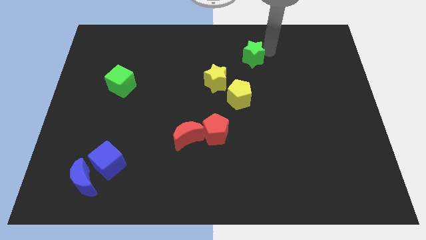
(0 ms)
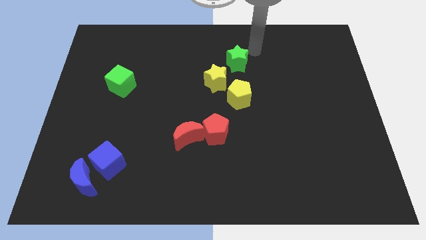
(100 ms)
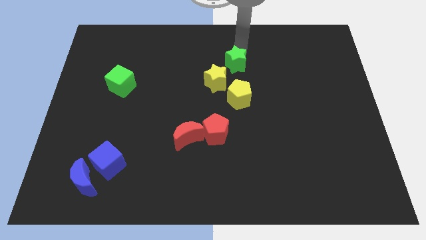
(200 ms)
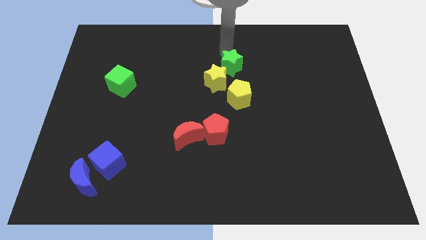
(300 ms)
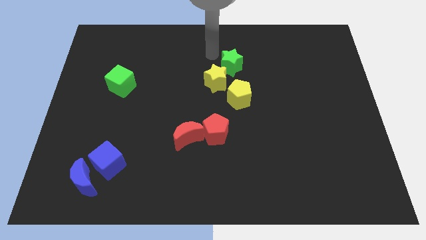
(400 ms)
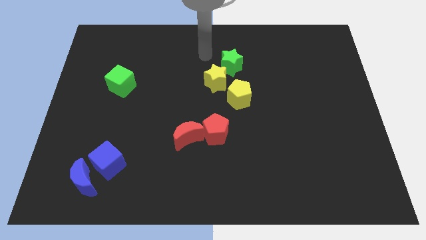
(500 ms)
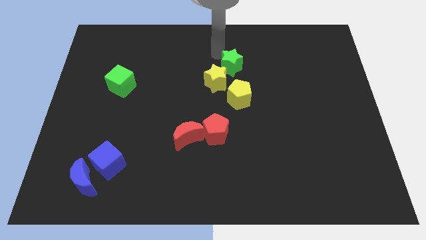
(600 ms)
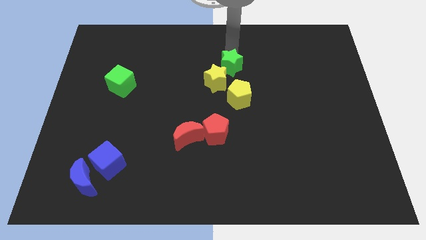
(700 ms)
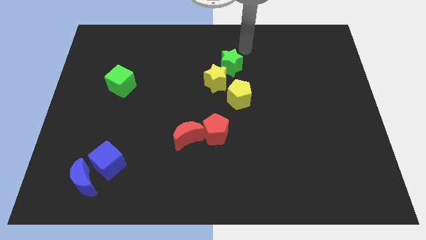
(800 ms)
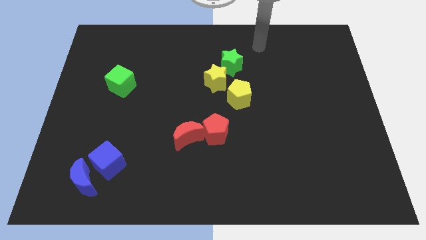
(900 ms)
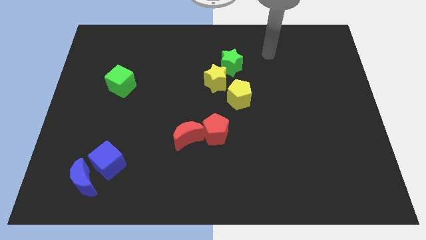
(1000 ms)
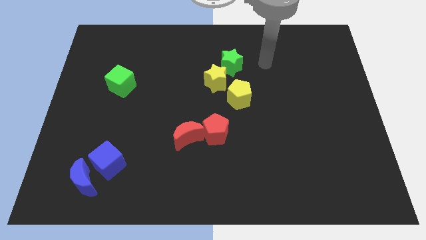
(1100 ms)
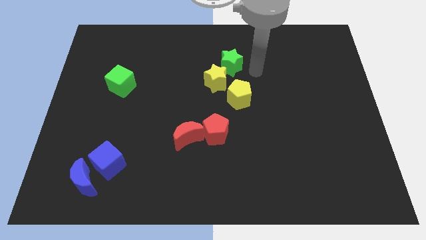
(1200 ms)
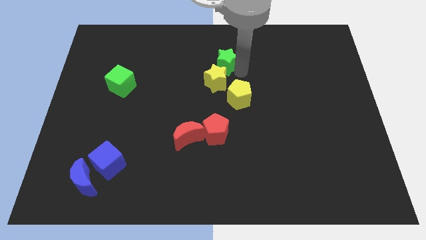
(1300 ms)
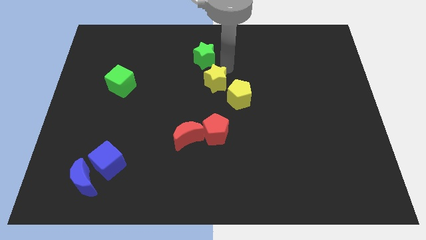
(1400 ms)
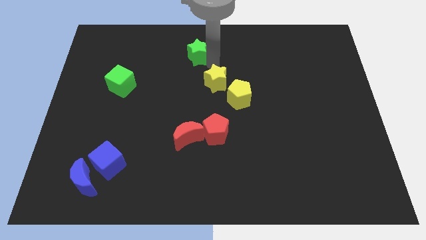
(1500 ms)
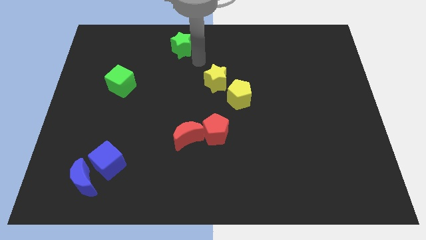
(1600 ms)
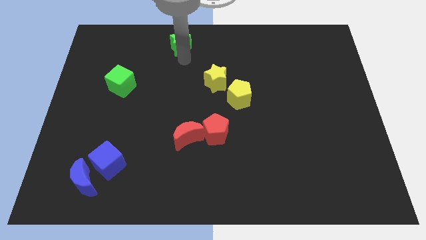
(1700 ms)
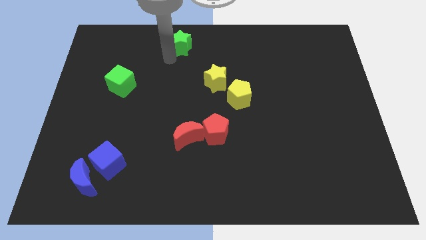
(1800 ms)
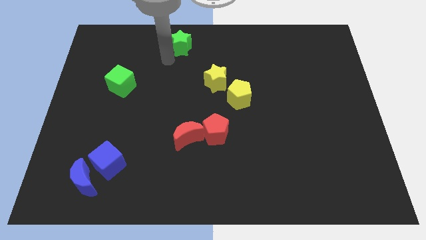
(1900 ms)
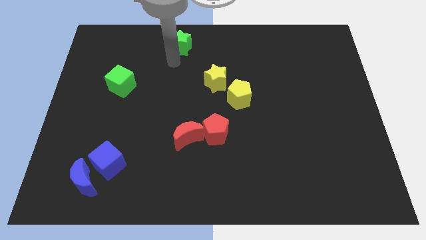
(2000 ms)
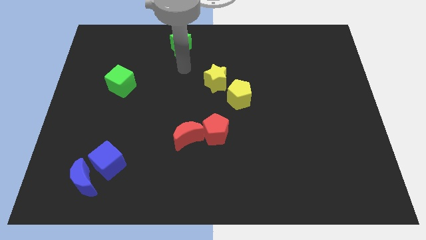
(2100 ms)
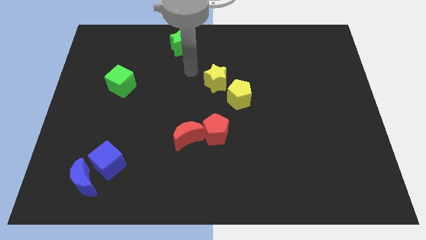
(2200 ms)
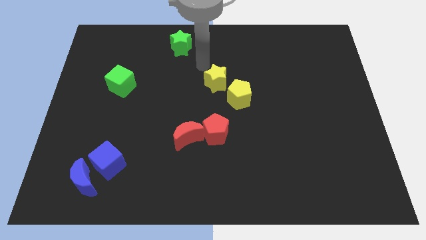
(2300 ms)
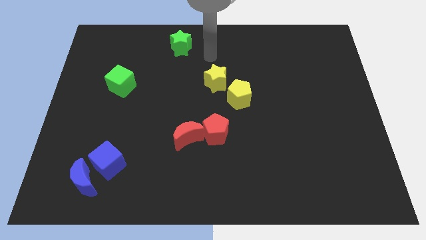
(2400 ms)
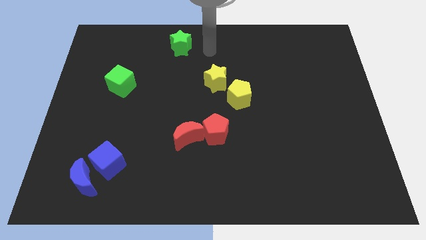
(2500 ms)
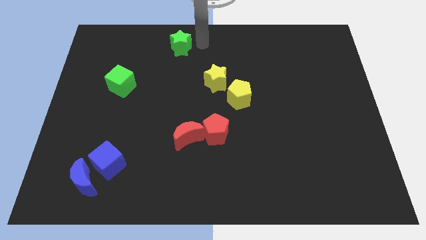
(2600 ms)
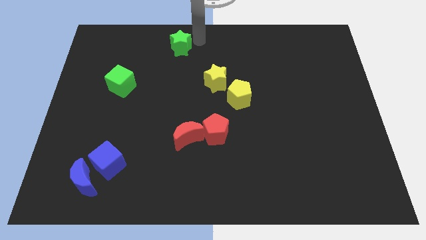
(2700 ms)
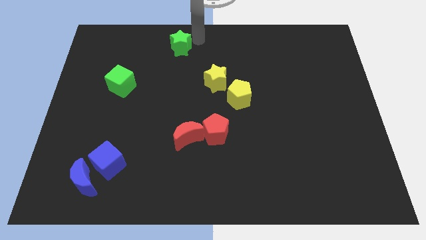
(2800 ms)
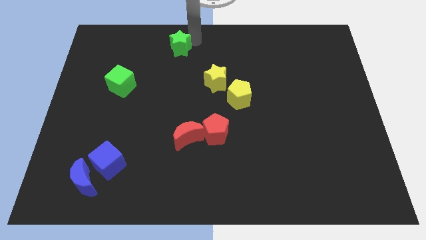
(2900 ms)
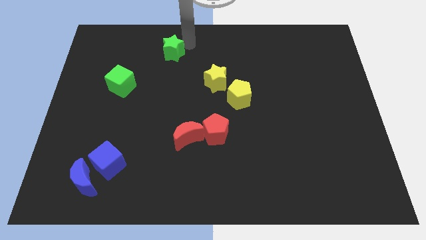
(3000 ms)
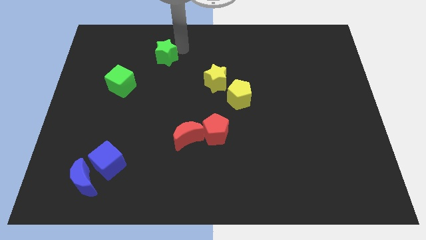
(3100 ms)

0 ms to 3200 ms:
place the green star above the green cube and the yellow star to form a triangle

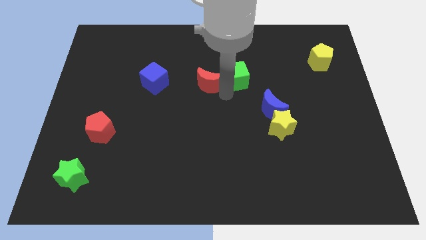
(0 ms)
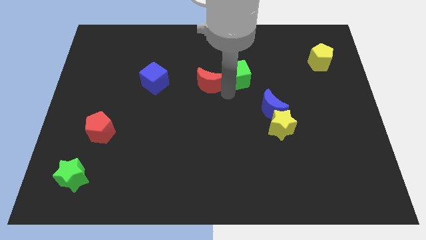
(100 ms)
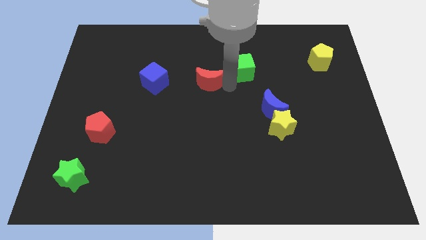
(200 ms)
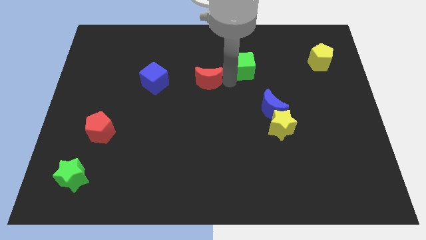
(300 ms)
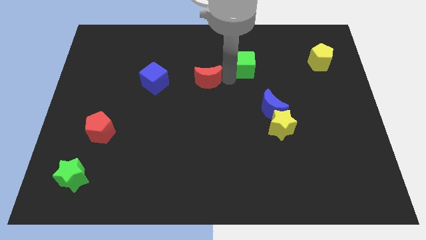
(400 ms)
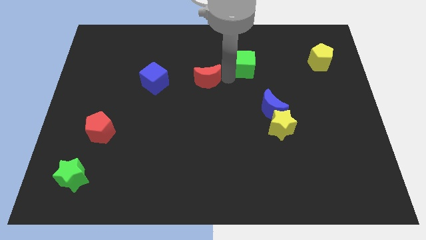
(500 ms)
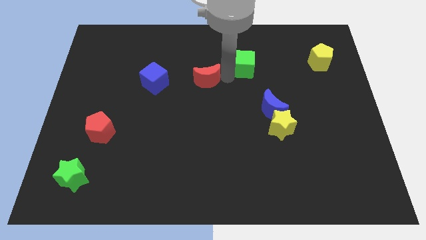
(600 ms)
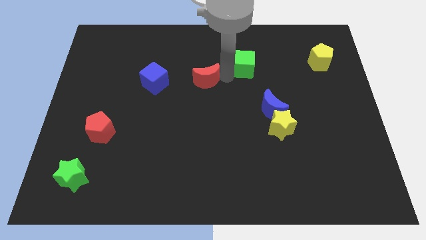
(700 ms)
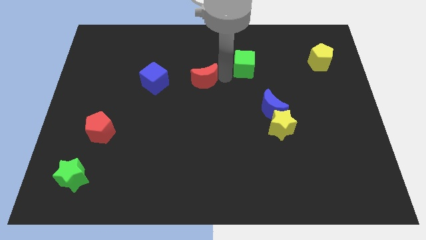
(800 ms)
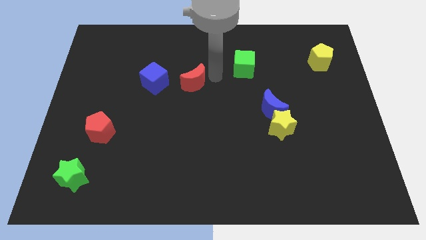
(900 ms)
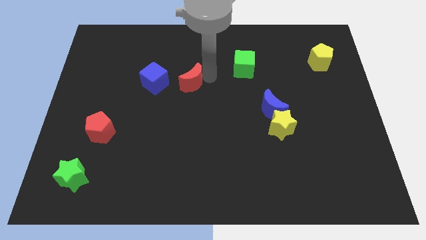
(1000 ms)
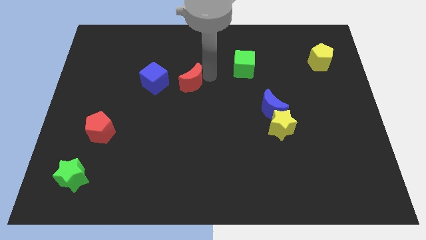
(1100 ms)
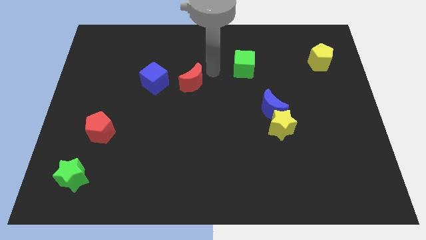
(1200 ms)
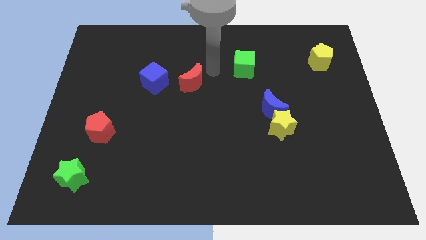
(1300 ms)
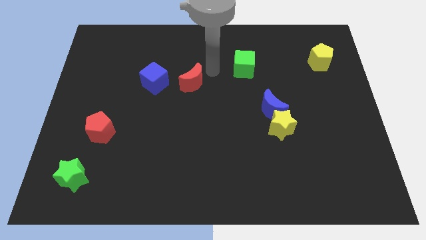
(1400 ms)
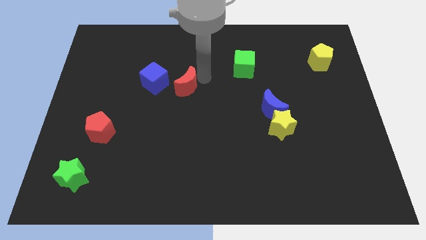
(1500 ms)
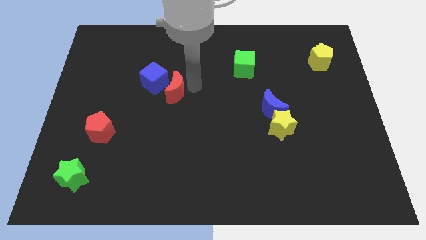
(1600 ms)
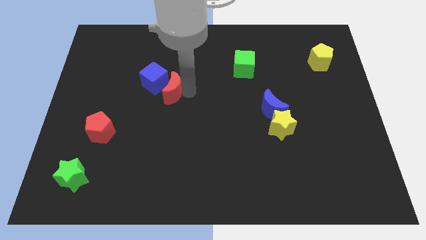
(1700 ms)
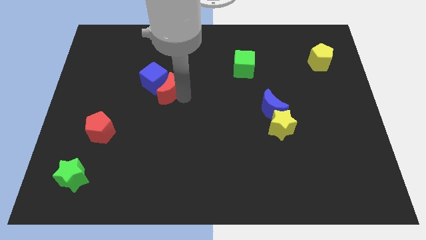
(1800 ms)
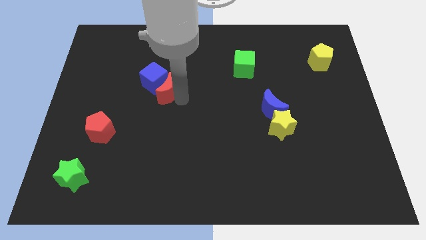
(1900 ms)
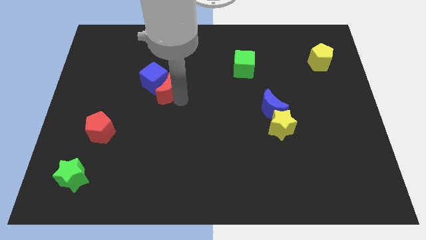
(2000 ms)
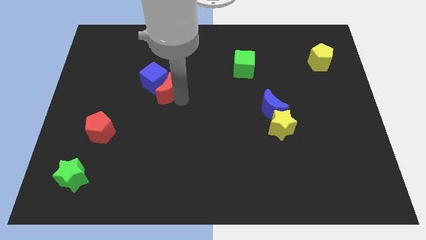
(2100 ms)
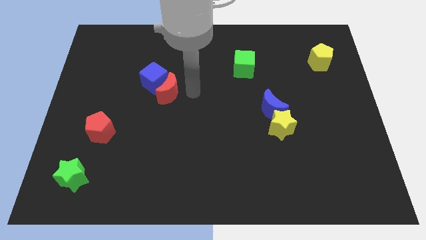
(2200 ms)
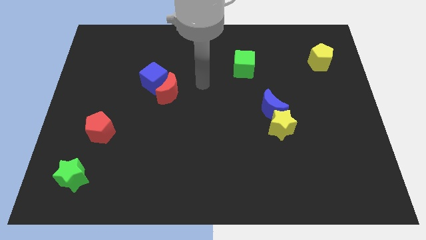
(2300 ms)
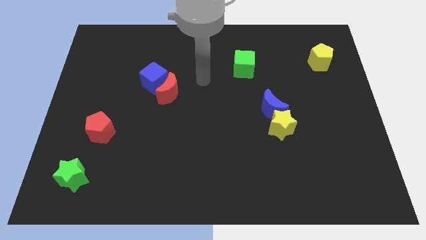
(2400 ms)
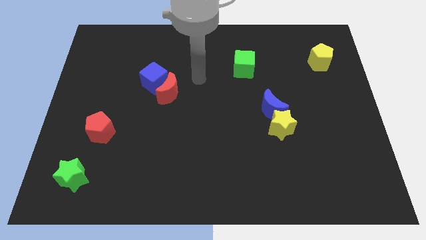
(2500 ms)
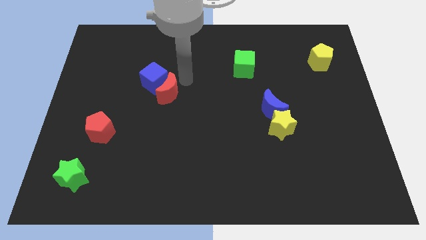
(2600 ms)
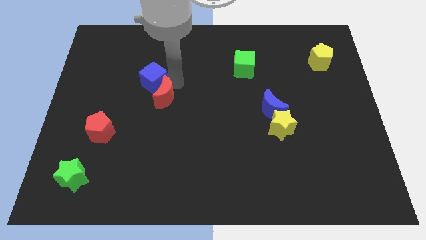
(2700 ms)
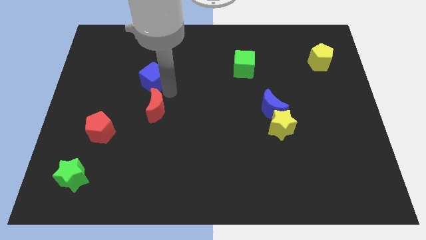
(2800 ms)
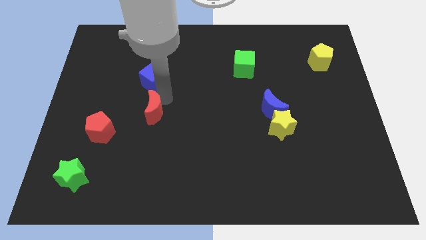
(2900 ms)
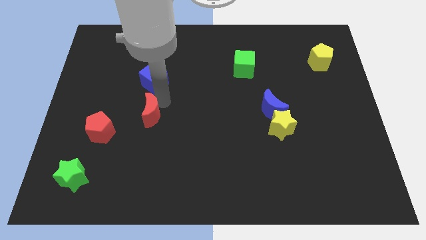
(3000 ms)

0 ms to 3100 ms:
move the red moon below the blue cube

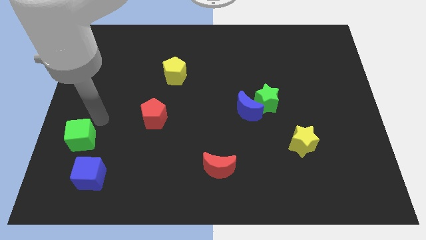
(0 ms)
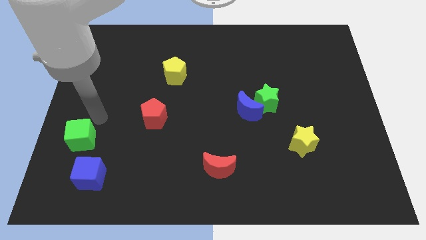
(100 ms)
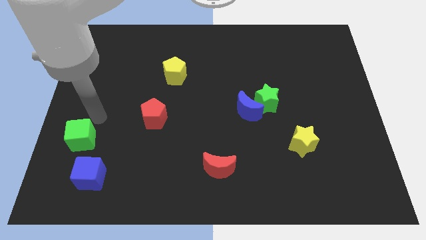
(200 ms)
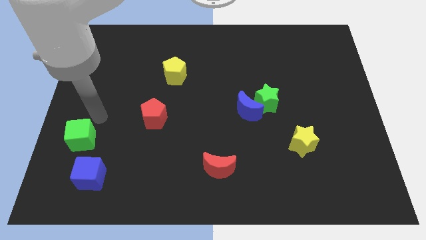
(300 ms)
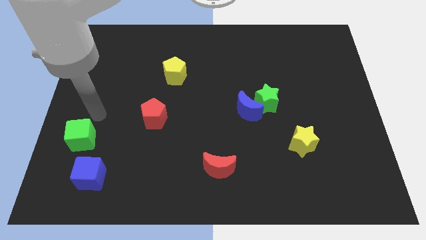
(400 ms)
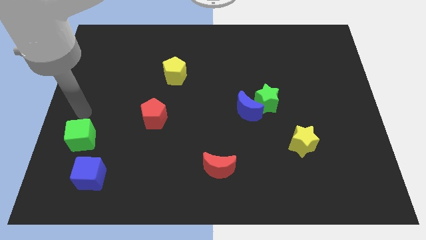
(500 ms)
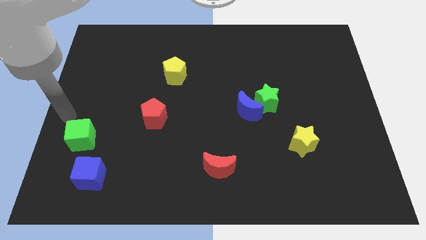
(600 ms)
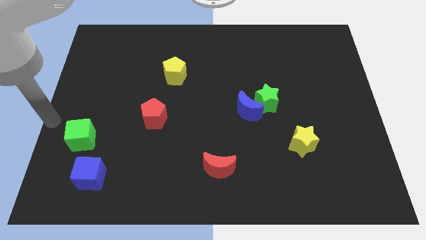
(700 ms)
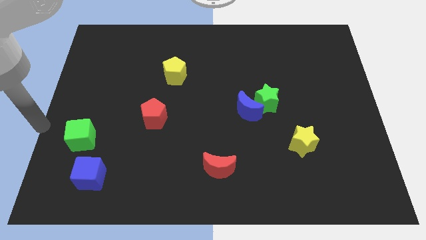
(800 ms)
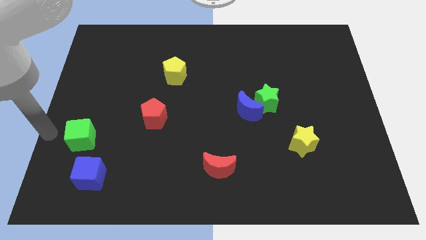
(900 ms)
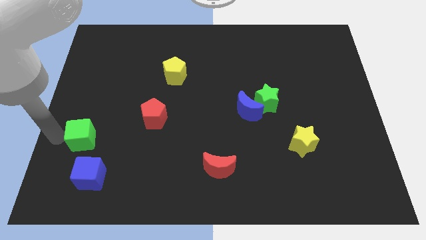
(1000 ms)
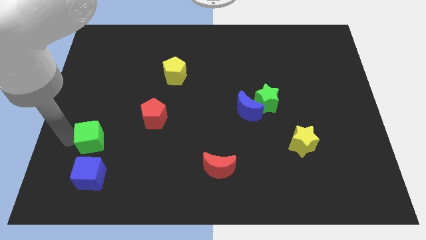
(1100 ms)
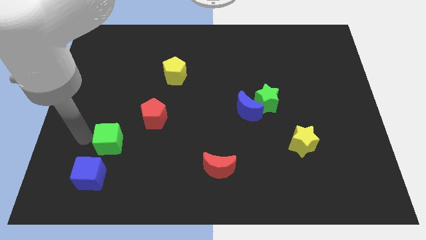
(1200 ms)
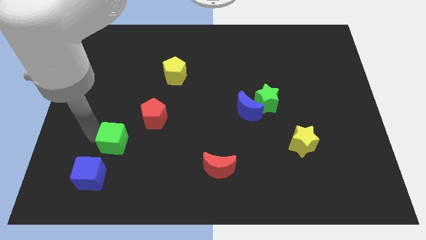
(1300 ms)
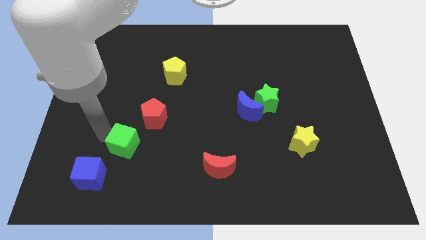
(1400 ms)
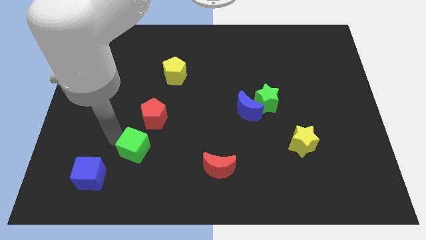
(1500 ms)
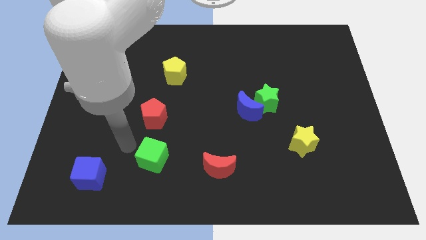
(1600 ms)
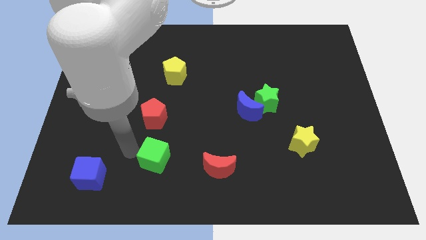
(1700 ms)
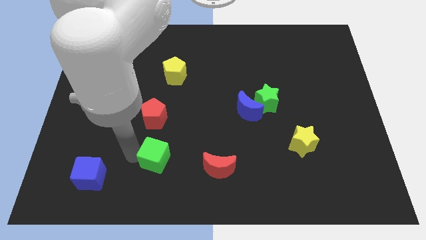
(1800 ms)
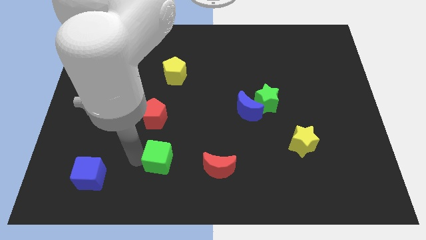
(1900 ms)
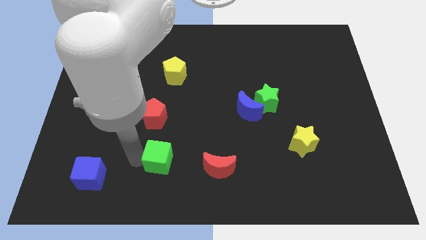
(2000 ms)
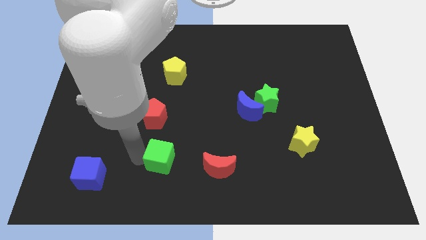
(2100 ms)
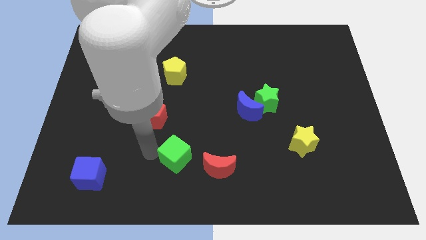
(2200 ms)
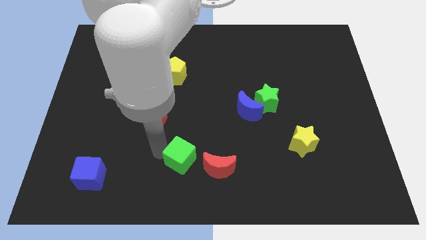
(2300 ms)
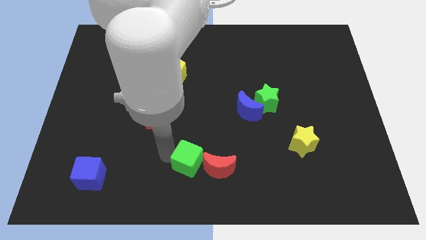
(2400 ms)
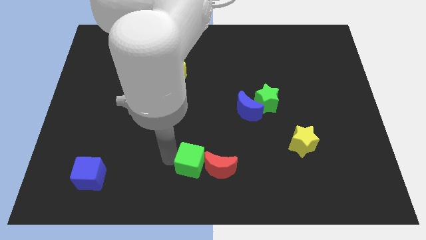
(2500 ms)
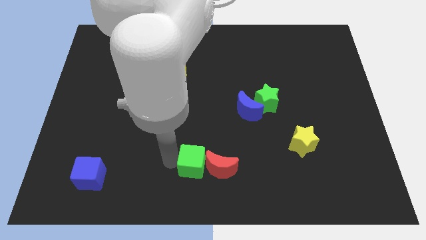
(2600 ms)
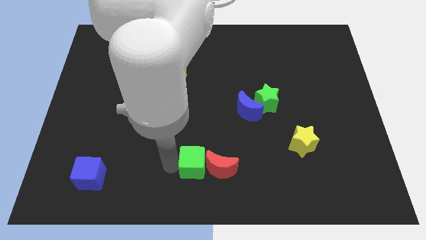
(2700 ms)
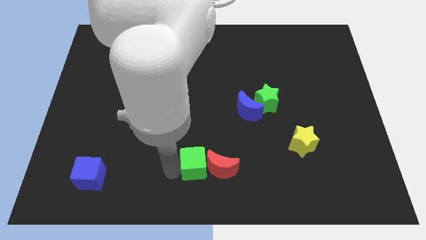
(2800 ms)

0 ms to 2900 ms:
drag green cube beside red moon
